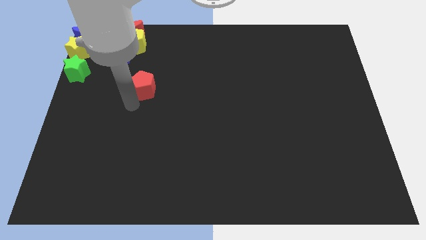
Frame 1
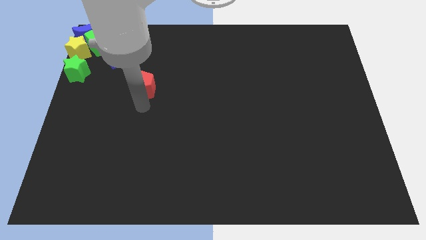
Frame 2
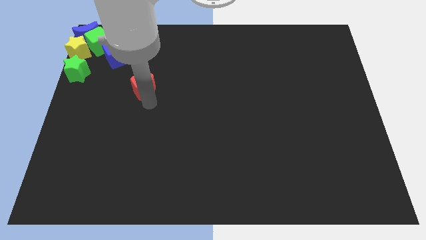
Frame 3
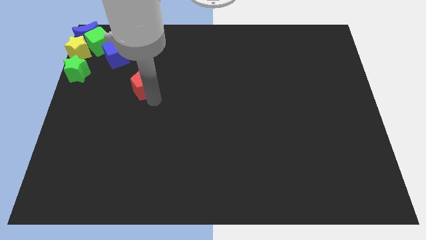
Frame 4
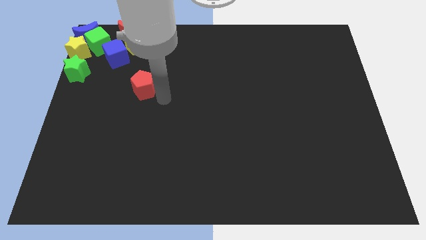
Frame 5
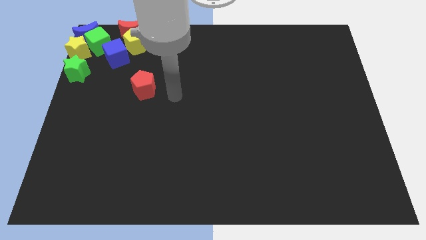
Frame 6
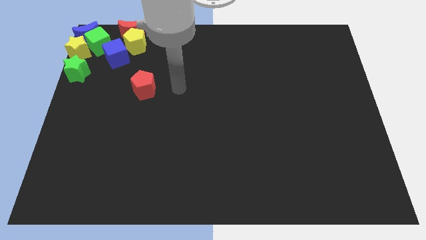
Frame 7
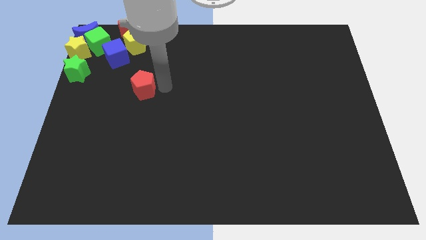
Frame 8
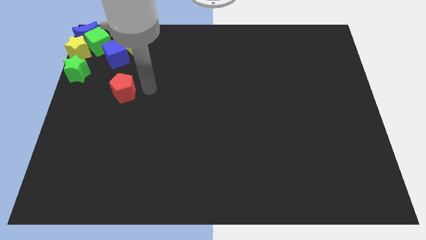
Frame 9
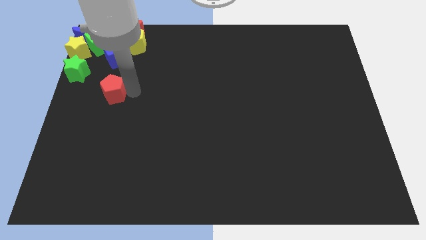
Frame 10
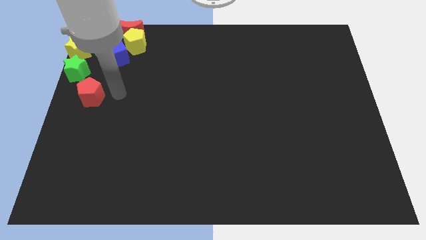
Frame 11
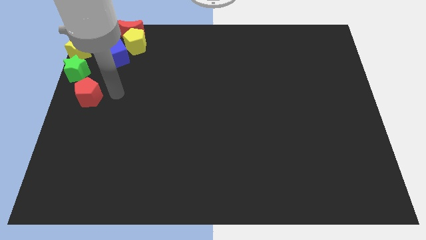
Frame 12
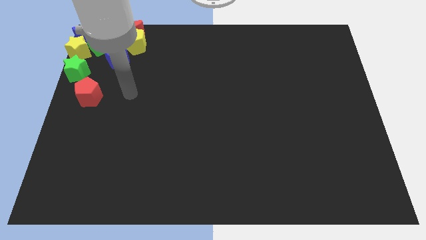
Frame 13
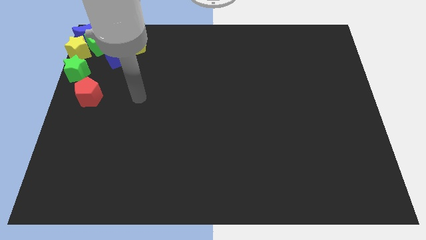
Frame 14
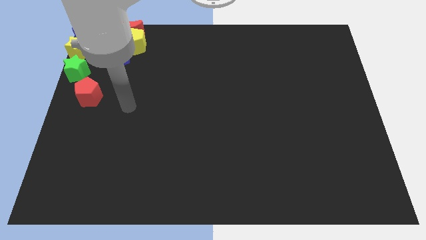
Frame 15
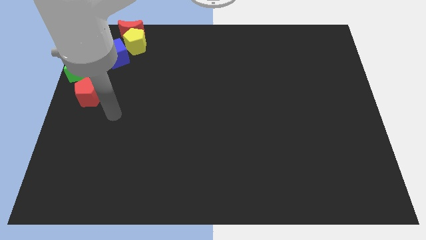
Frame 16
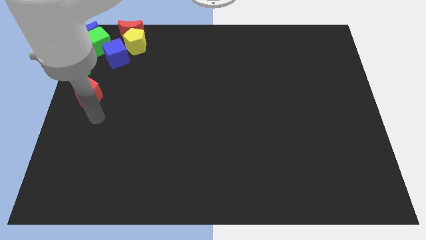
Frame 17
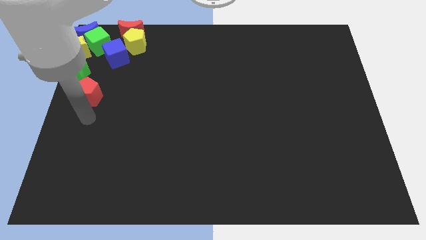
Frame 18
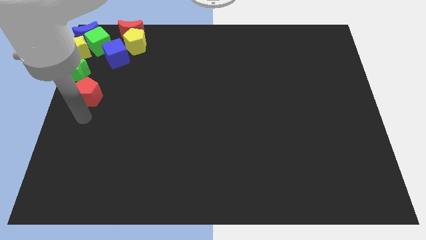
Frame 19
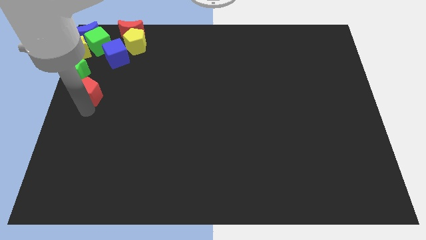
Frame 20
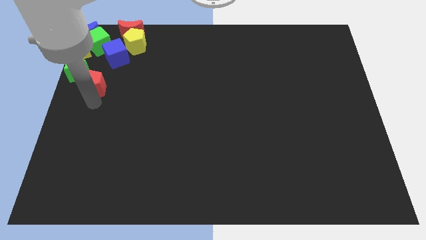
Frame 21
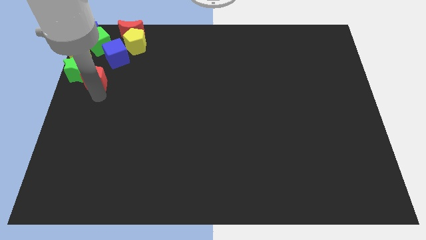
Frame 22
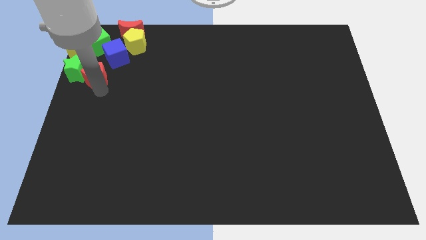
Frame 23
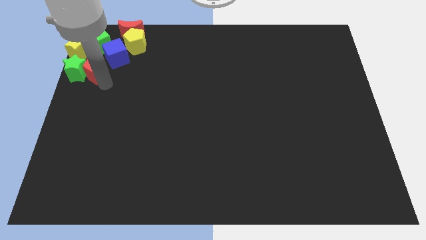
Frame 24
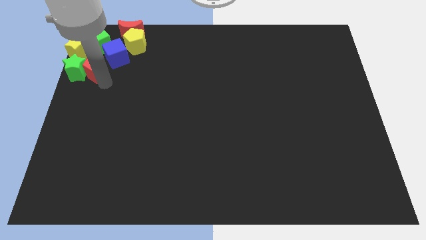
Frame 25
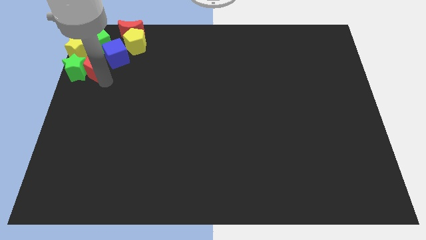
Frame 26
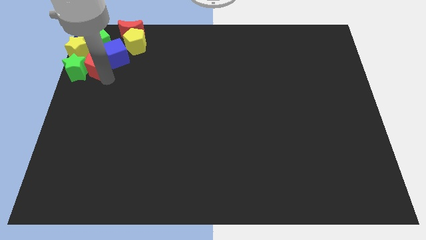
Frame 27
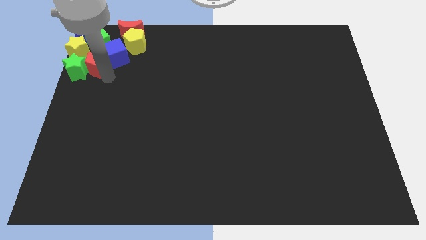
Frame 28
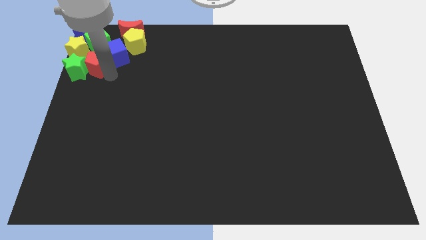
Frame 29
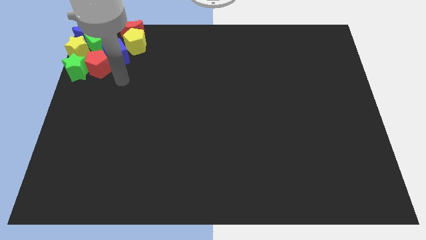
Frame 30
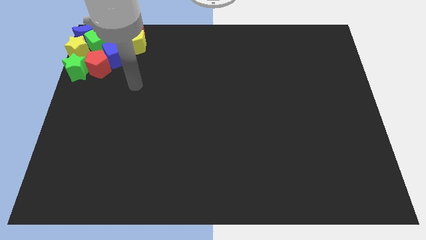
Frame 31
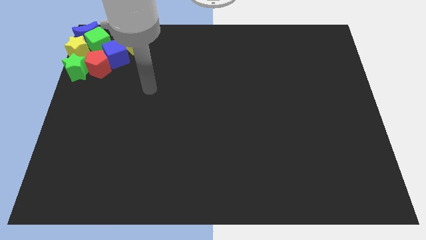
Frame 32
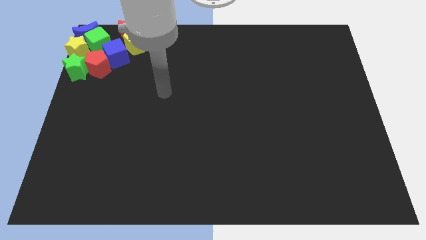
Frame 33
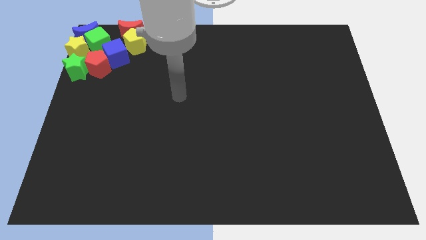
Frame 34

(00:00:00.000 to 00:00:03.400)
move the red pentagon to the bottom of the green cube

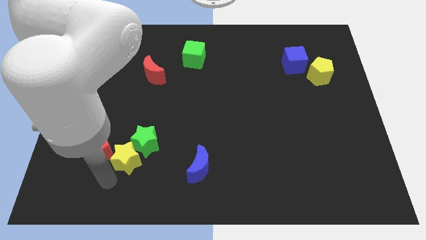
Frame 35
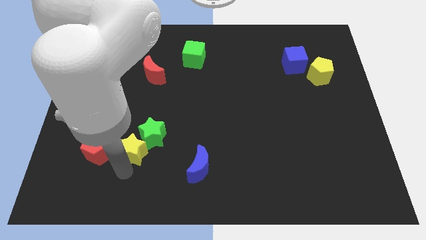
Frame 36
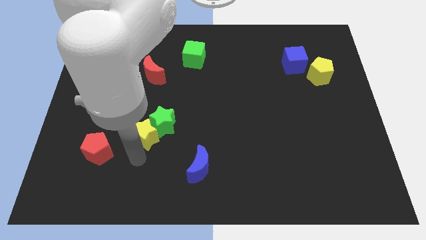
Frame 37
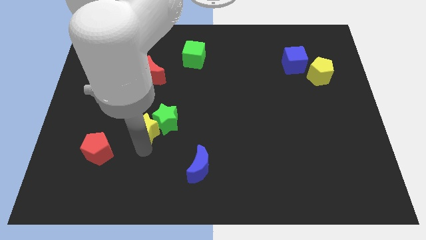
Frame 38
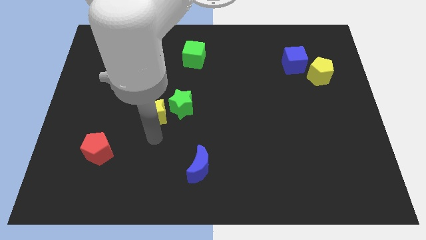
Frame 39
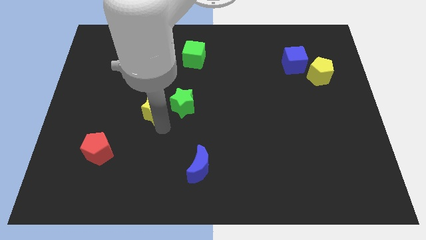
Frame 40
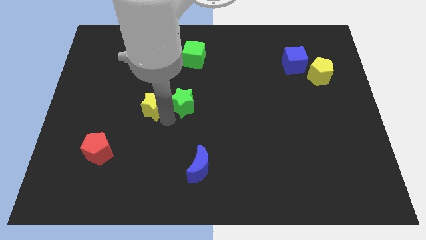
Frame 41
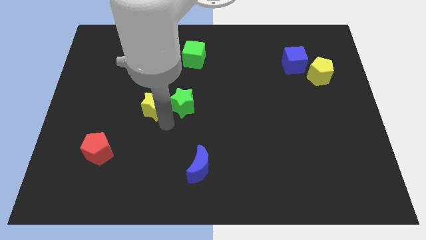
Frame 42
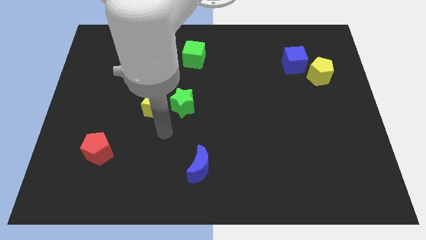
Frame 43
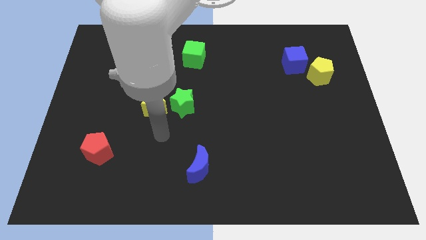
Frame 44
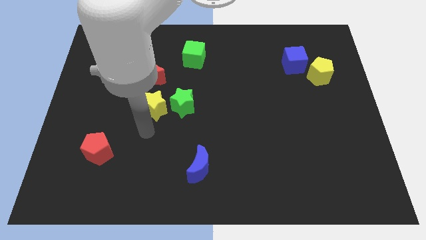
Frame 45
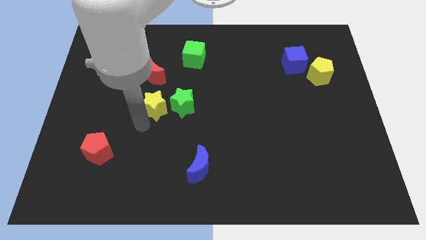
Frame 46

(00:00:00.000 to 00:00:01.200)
push yellow star into green star

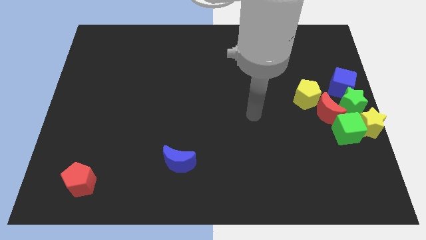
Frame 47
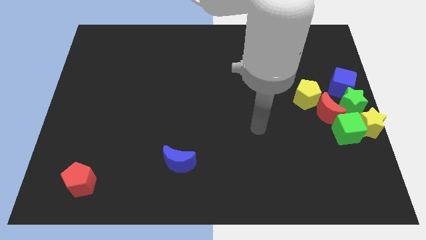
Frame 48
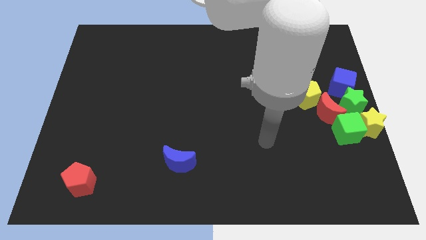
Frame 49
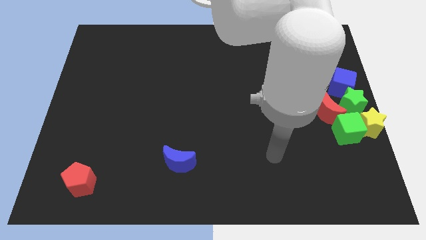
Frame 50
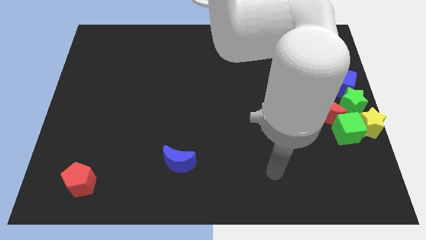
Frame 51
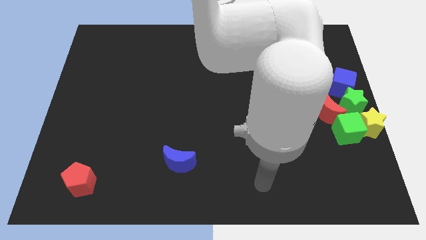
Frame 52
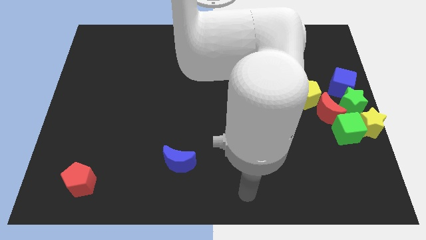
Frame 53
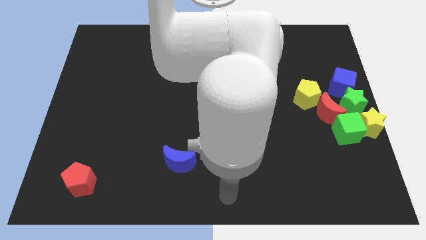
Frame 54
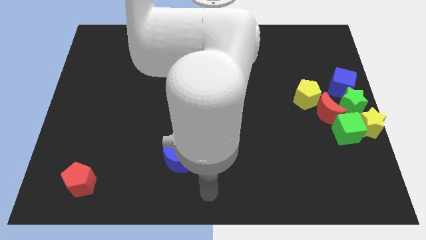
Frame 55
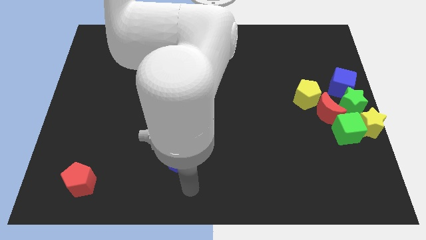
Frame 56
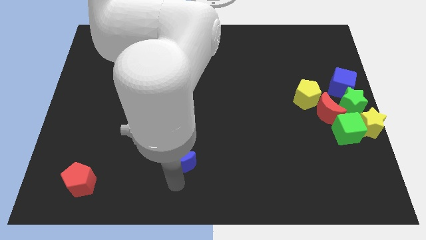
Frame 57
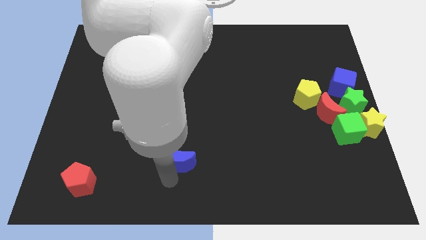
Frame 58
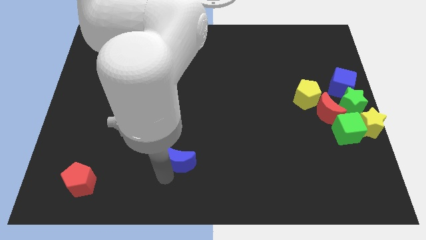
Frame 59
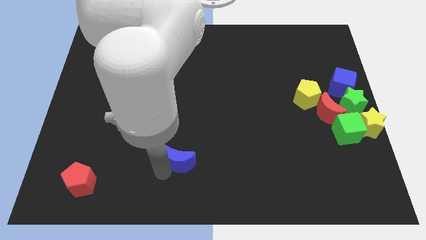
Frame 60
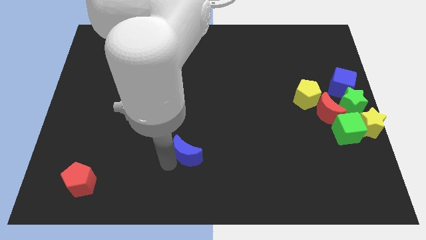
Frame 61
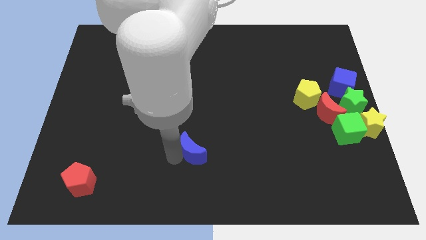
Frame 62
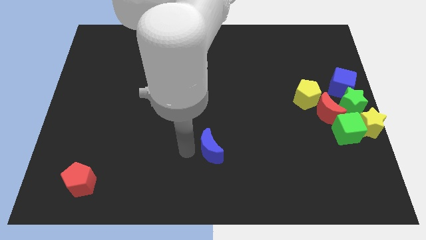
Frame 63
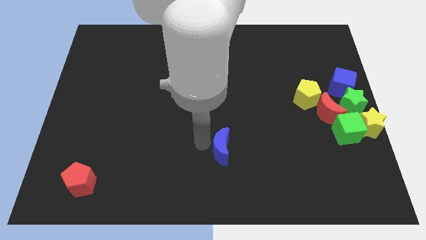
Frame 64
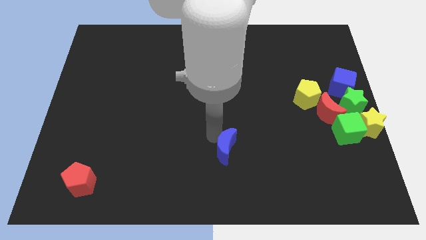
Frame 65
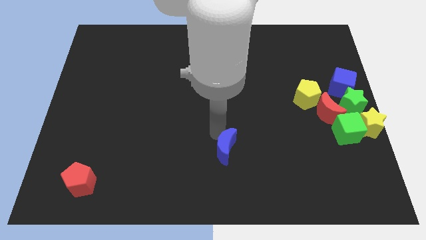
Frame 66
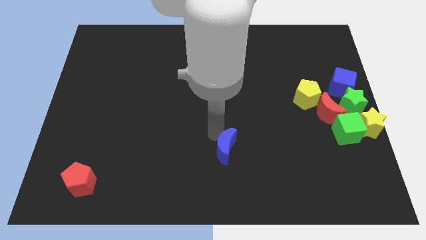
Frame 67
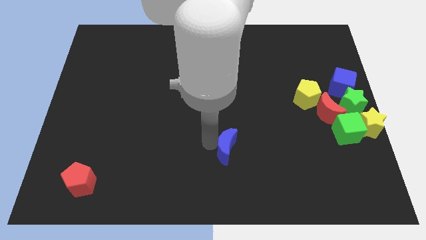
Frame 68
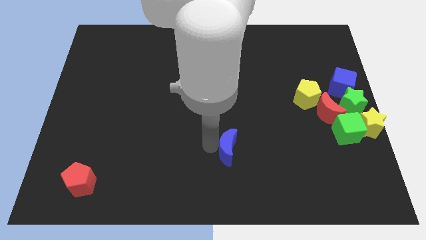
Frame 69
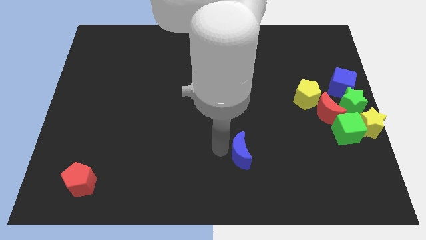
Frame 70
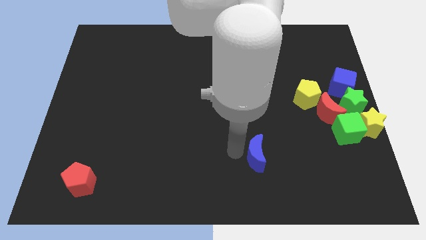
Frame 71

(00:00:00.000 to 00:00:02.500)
slide the blue moon to the right

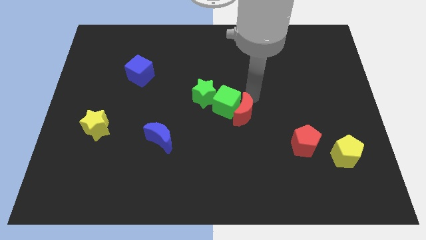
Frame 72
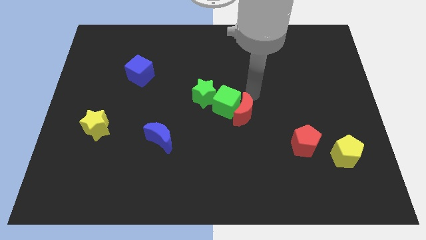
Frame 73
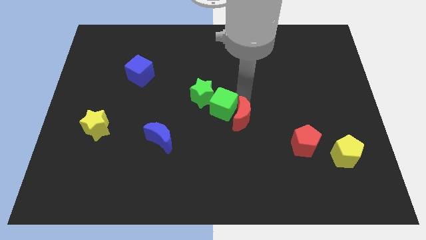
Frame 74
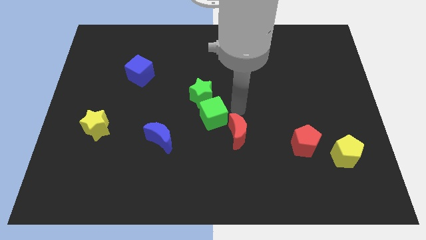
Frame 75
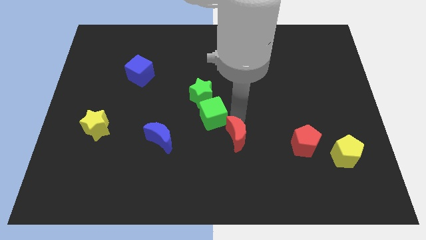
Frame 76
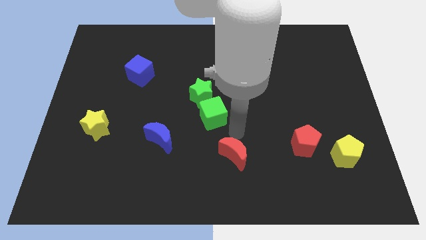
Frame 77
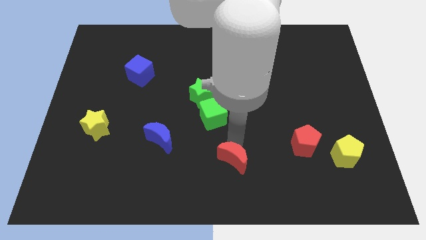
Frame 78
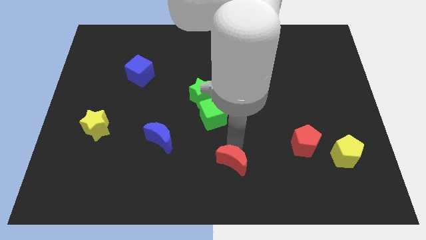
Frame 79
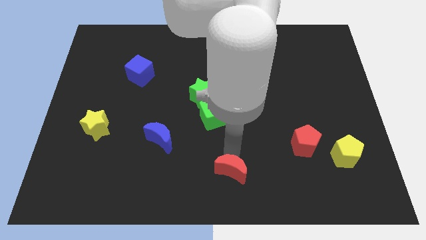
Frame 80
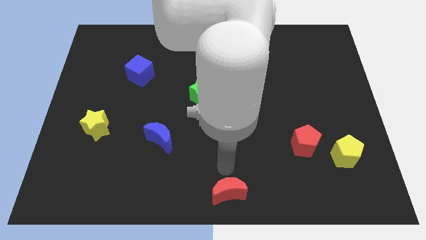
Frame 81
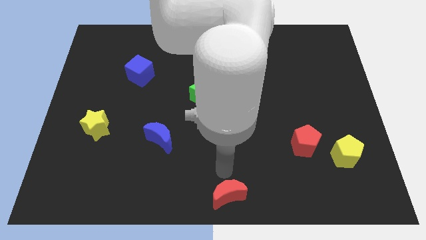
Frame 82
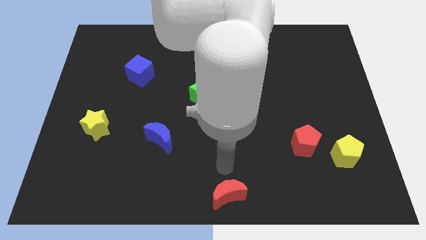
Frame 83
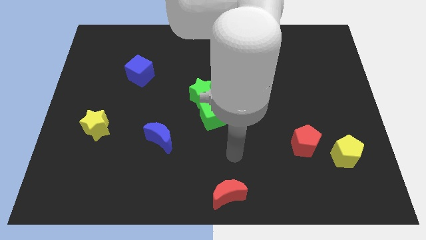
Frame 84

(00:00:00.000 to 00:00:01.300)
push the red crescent towards the bottom center of the board

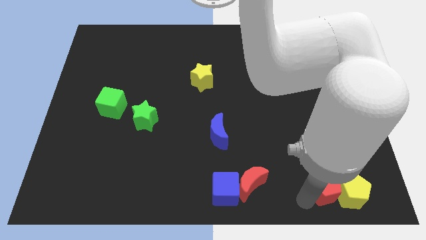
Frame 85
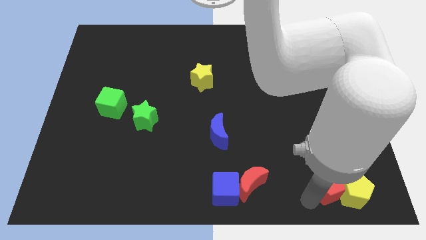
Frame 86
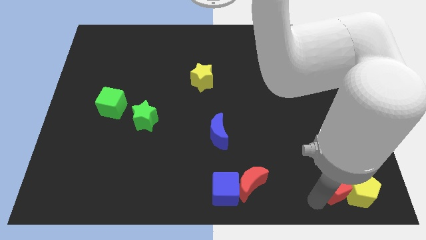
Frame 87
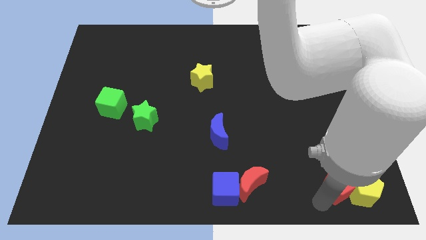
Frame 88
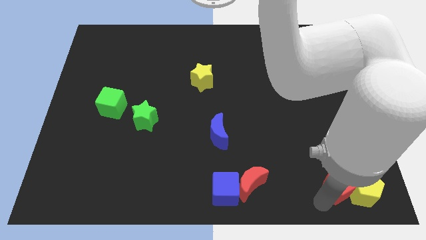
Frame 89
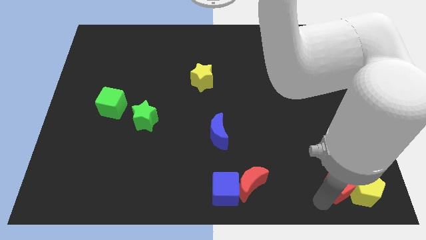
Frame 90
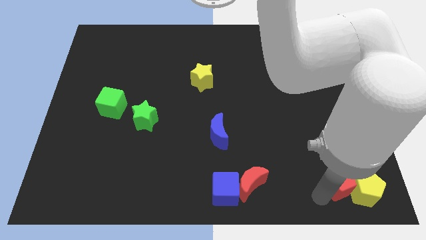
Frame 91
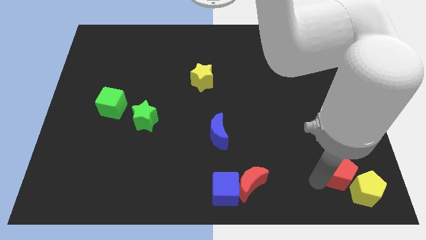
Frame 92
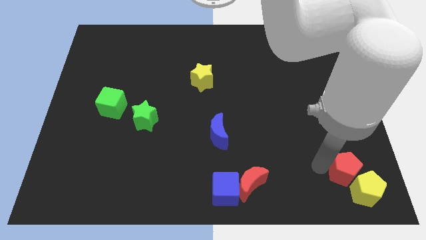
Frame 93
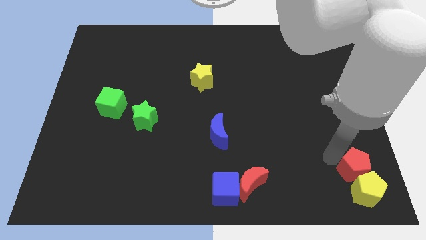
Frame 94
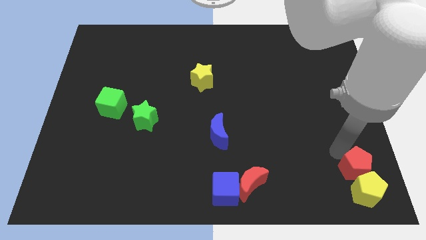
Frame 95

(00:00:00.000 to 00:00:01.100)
slide red pentagon on top of yellow pentagon
